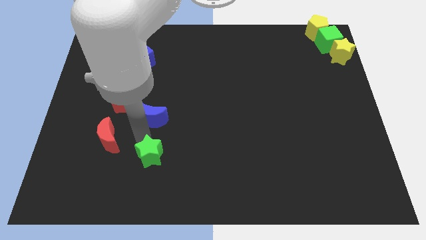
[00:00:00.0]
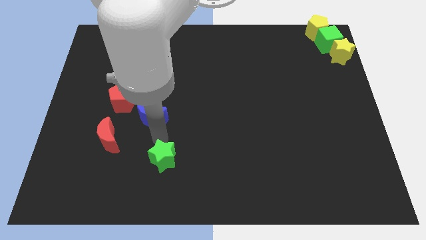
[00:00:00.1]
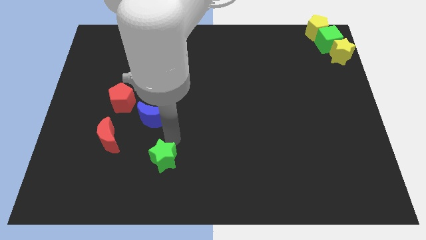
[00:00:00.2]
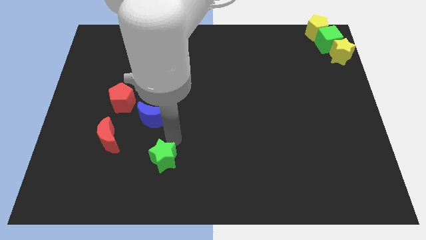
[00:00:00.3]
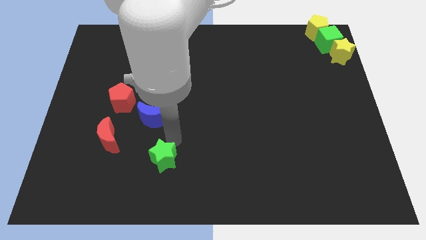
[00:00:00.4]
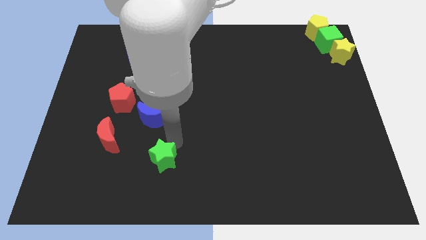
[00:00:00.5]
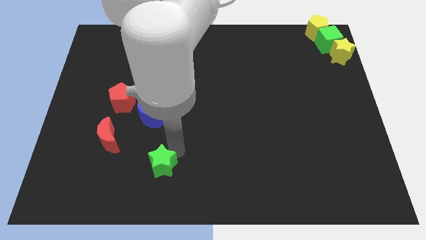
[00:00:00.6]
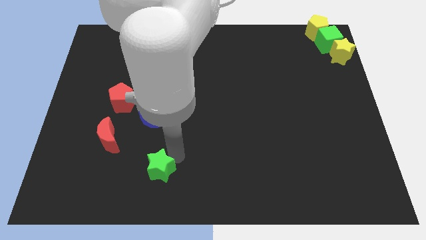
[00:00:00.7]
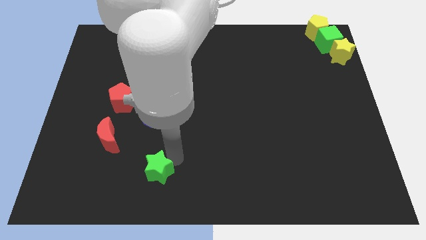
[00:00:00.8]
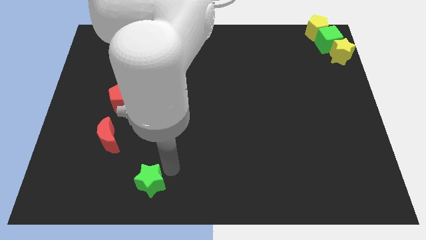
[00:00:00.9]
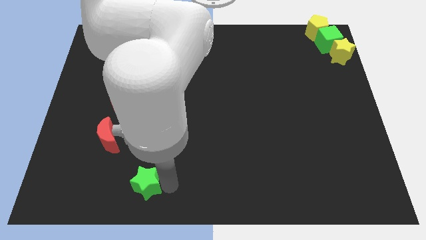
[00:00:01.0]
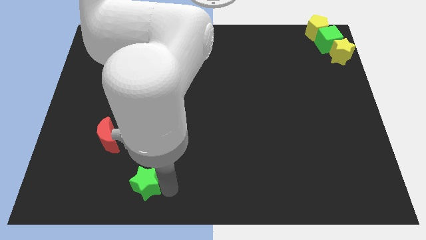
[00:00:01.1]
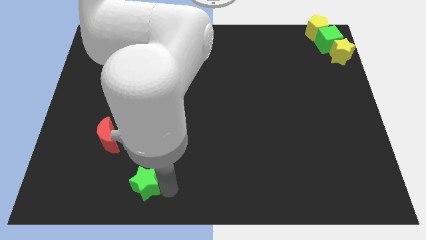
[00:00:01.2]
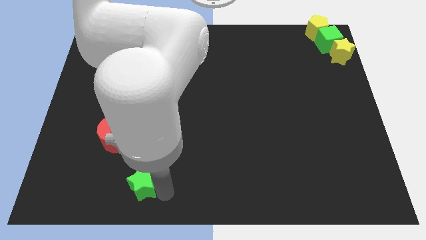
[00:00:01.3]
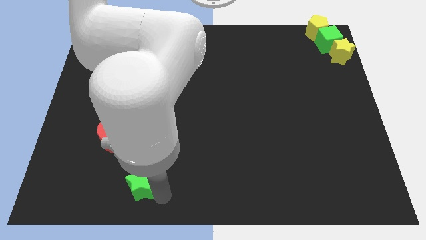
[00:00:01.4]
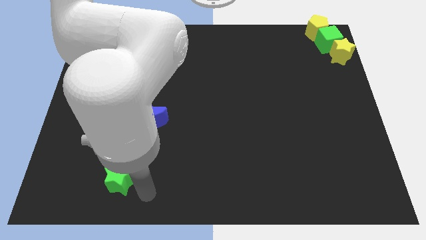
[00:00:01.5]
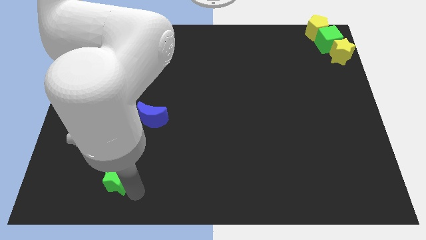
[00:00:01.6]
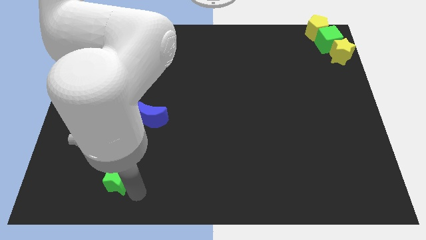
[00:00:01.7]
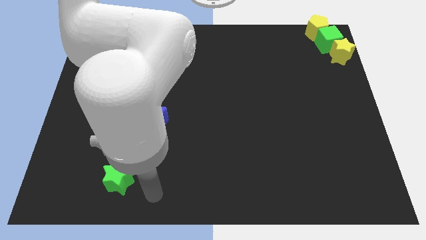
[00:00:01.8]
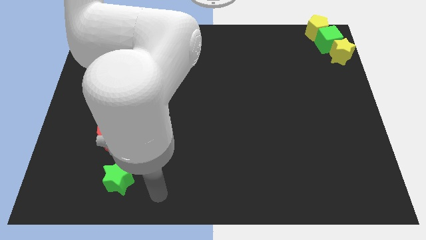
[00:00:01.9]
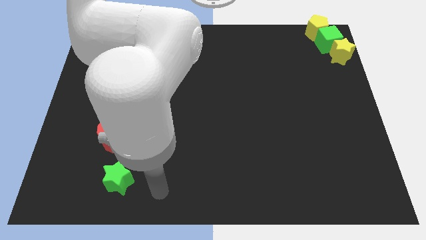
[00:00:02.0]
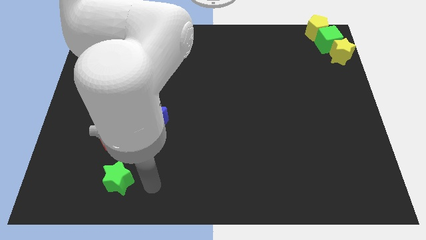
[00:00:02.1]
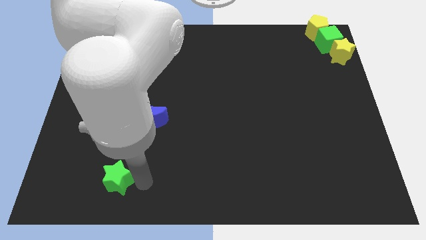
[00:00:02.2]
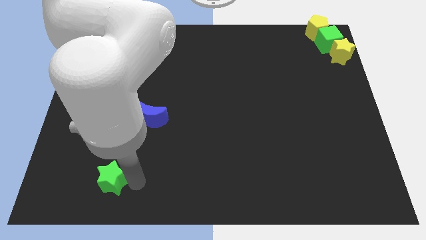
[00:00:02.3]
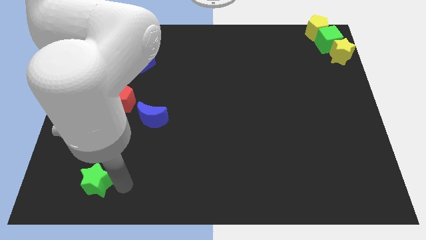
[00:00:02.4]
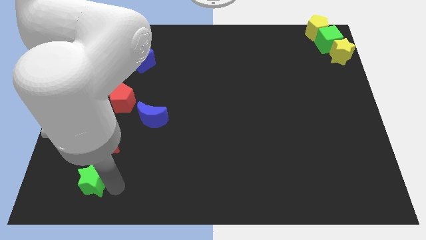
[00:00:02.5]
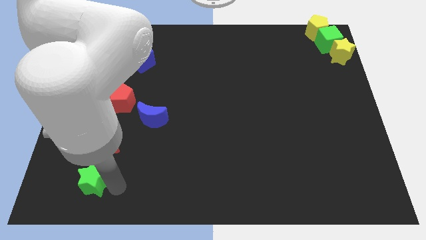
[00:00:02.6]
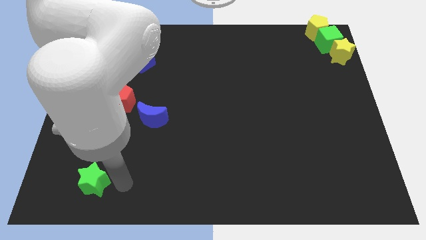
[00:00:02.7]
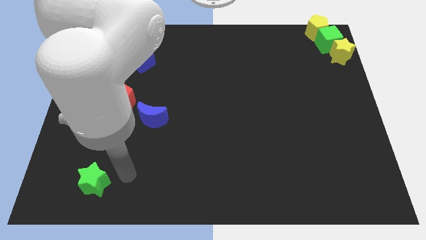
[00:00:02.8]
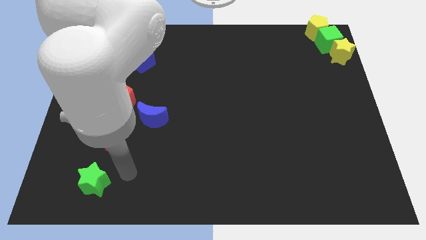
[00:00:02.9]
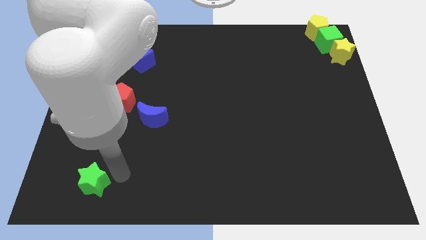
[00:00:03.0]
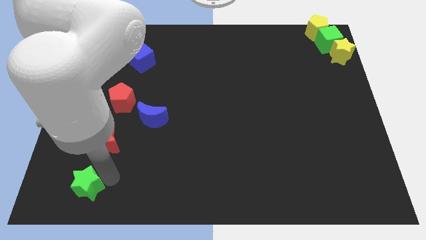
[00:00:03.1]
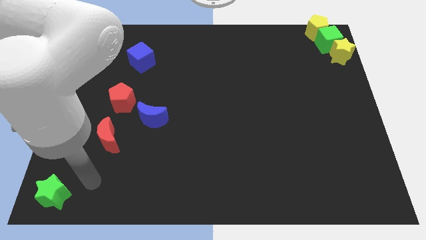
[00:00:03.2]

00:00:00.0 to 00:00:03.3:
move the green star to the bottom left corner to the board

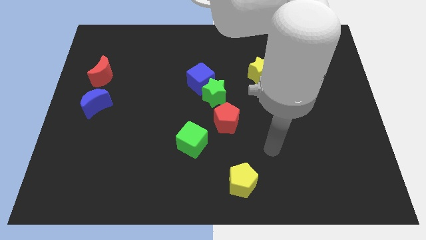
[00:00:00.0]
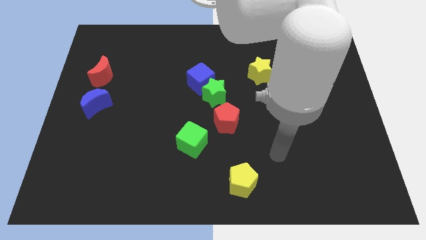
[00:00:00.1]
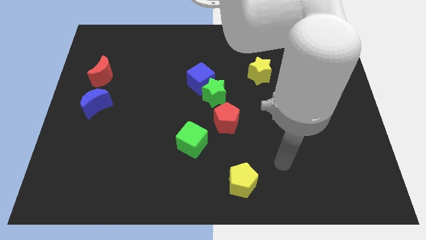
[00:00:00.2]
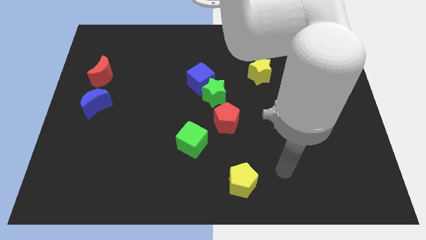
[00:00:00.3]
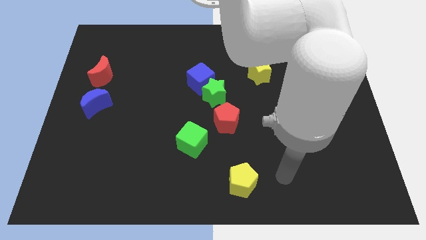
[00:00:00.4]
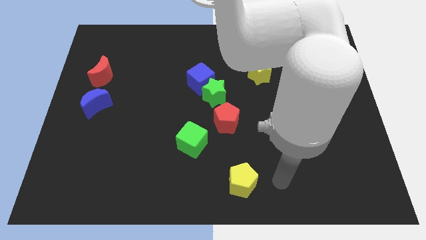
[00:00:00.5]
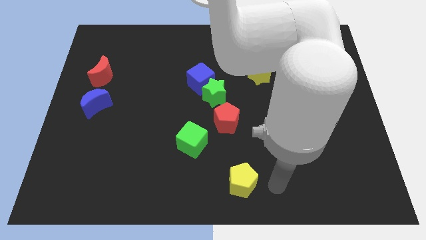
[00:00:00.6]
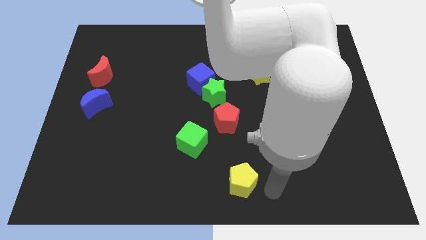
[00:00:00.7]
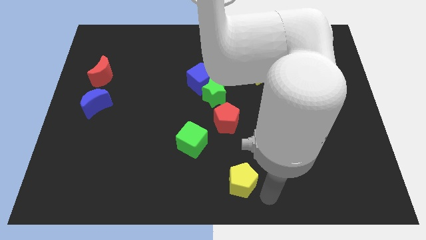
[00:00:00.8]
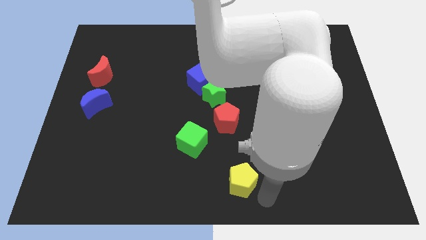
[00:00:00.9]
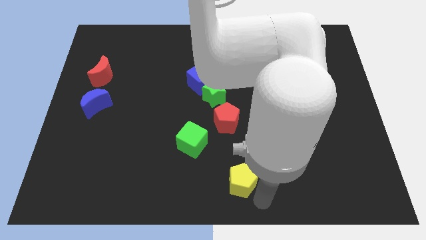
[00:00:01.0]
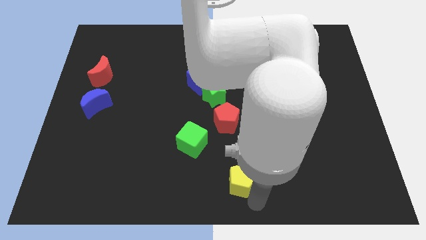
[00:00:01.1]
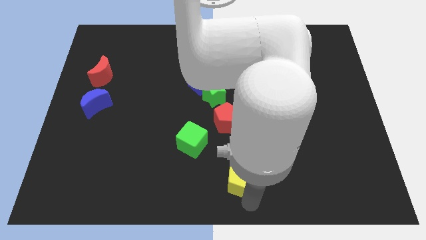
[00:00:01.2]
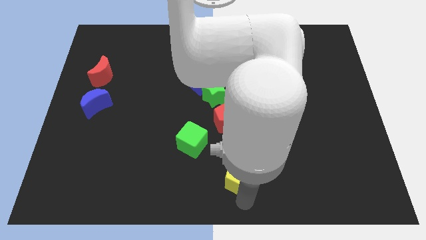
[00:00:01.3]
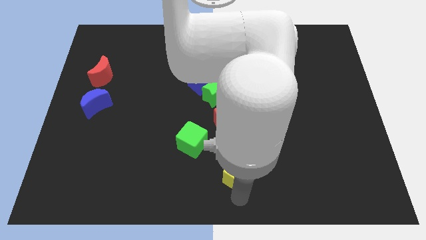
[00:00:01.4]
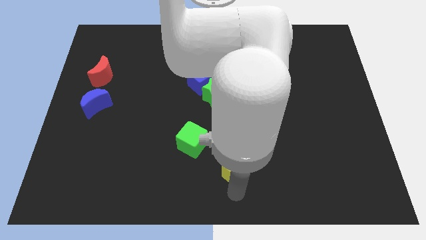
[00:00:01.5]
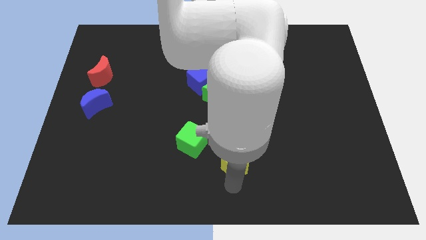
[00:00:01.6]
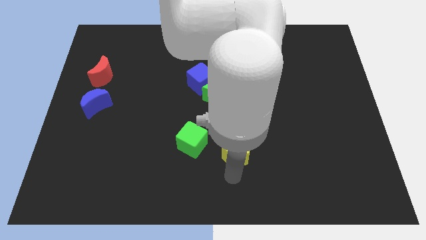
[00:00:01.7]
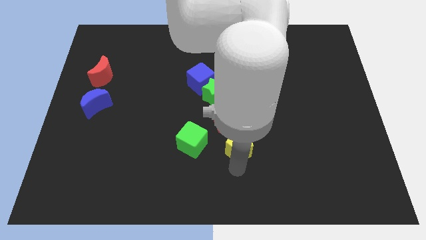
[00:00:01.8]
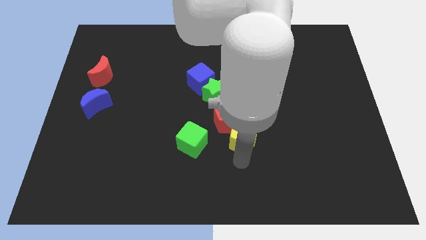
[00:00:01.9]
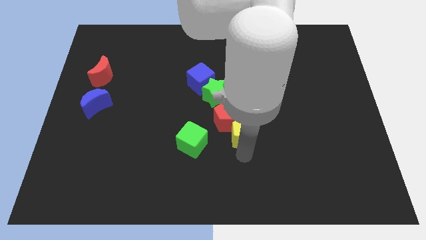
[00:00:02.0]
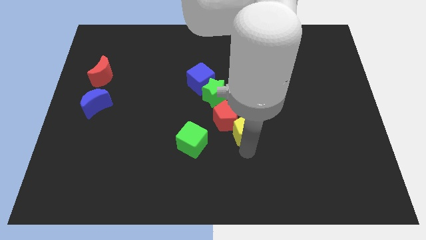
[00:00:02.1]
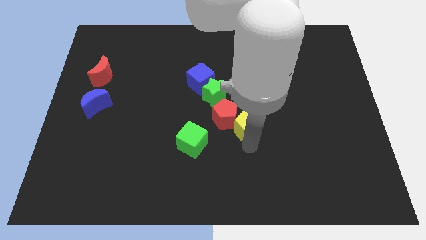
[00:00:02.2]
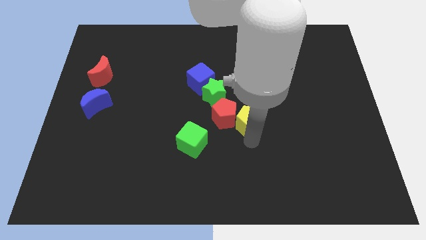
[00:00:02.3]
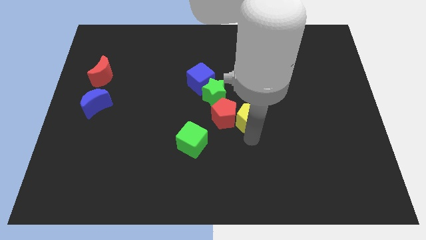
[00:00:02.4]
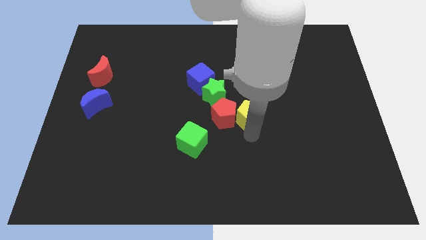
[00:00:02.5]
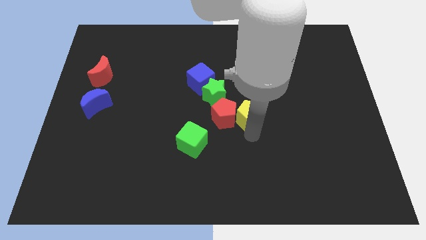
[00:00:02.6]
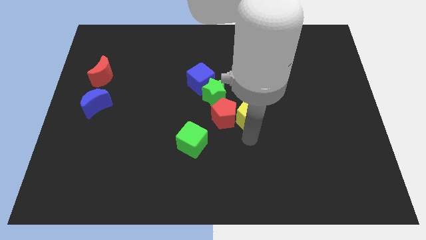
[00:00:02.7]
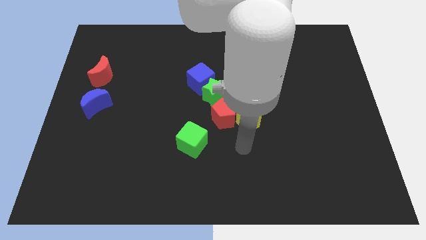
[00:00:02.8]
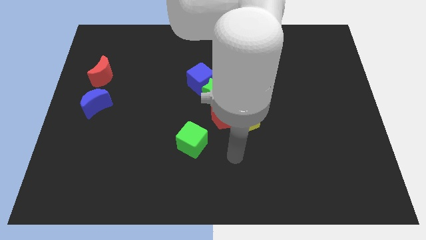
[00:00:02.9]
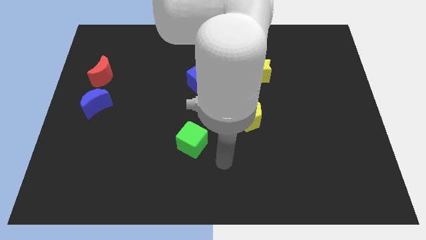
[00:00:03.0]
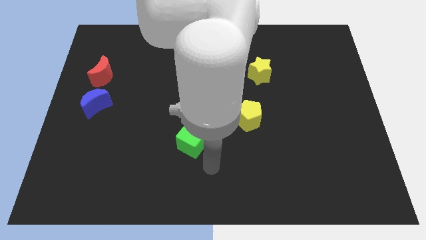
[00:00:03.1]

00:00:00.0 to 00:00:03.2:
move yellow pentagon right beside the red pentagon

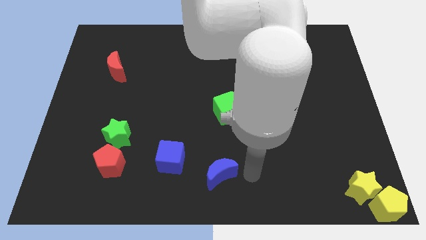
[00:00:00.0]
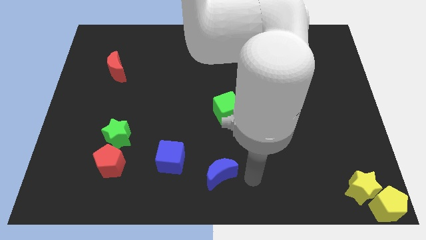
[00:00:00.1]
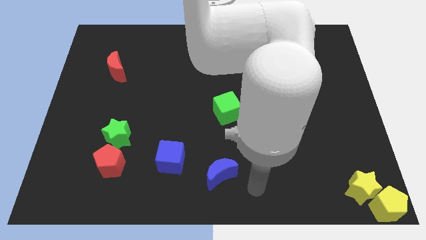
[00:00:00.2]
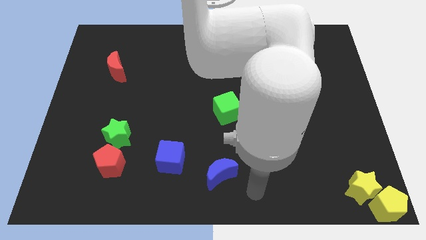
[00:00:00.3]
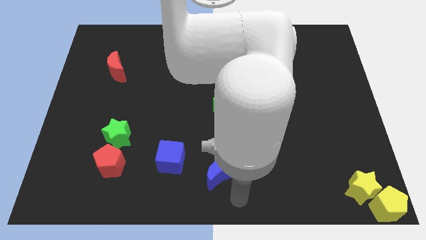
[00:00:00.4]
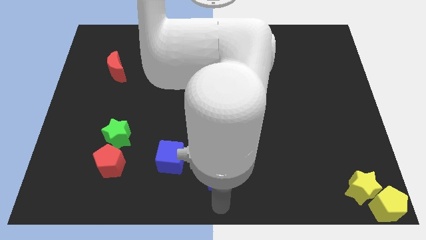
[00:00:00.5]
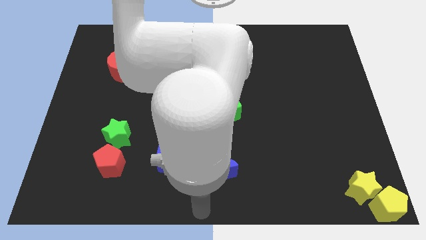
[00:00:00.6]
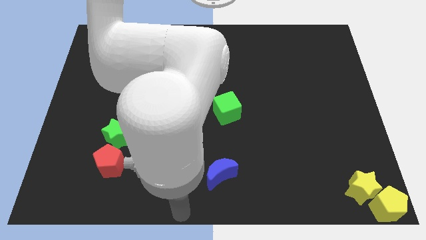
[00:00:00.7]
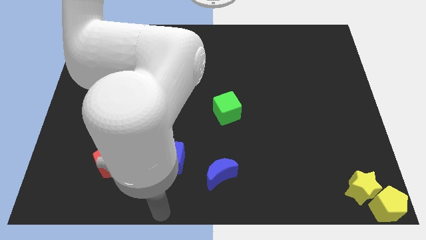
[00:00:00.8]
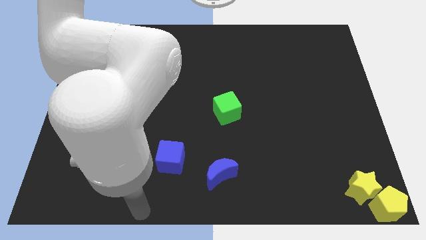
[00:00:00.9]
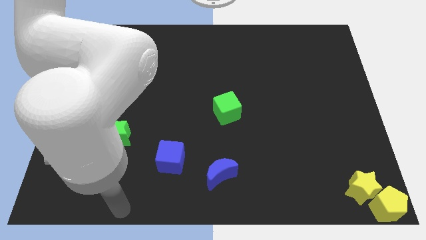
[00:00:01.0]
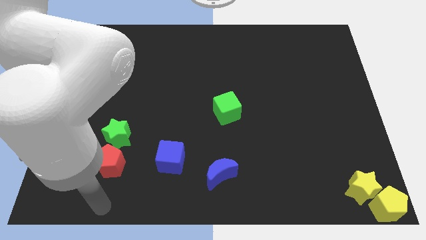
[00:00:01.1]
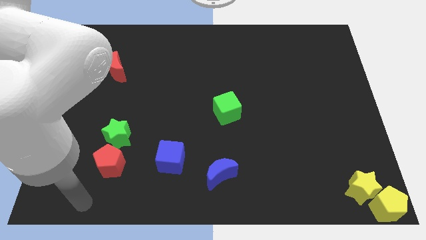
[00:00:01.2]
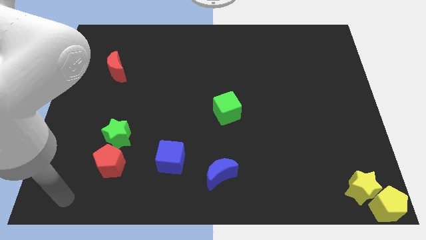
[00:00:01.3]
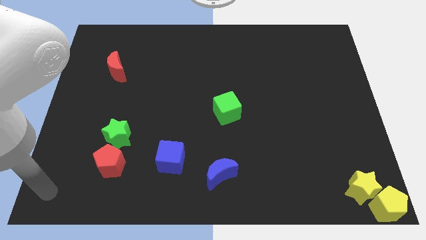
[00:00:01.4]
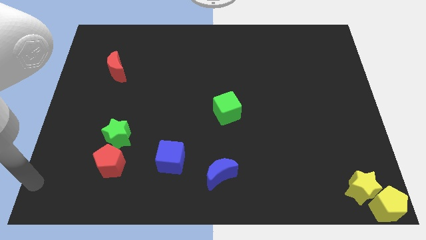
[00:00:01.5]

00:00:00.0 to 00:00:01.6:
move your arm towards the bottom left corner of the board

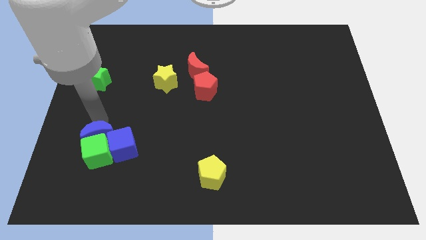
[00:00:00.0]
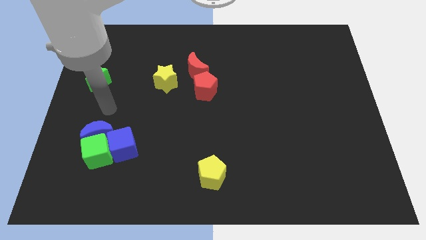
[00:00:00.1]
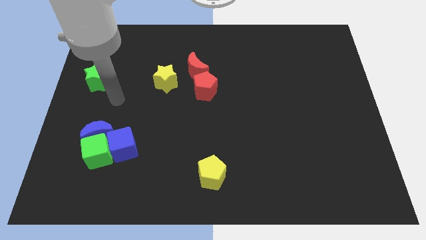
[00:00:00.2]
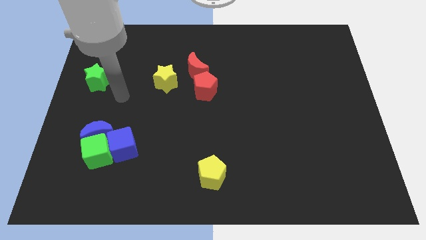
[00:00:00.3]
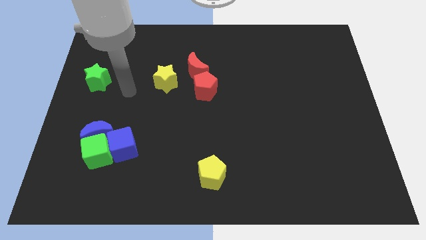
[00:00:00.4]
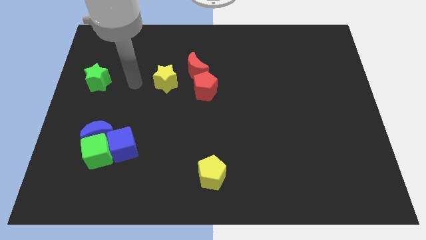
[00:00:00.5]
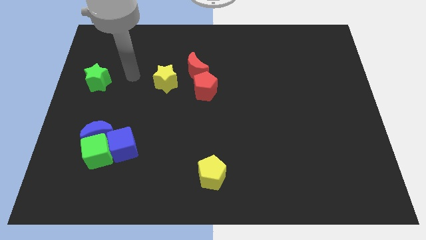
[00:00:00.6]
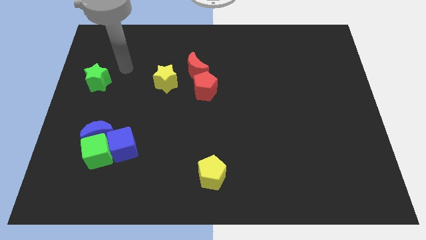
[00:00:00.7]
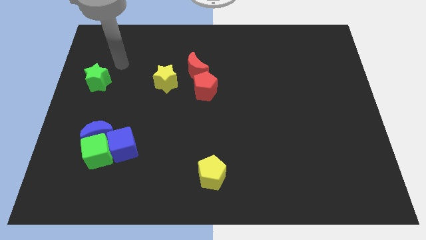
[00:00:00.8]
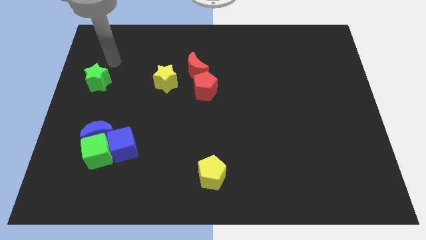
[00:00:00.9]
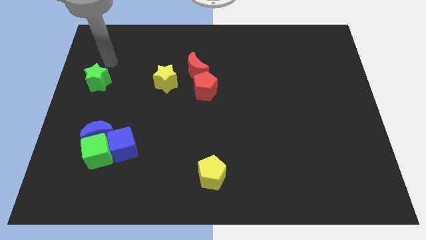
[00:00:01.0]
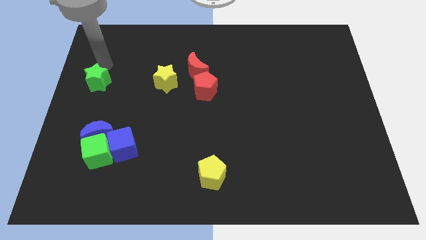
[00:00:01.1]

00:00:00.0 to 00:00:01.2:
move your arm to the top right of green star
